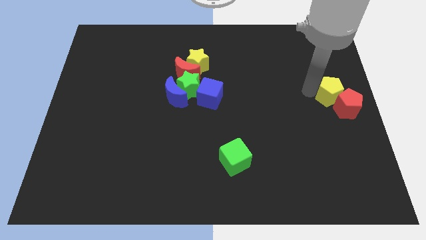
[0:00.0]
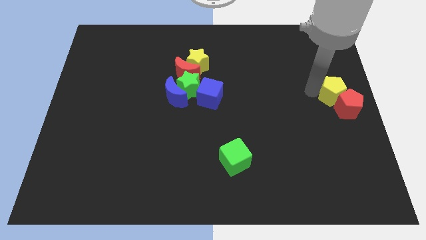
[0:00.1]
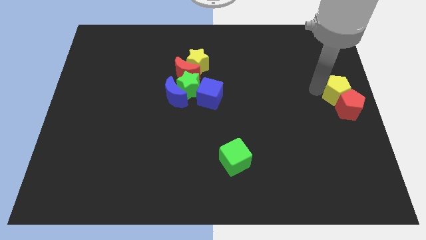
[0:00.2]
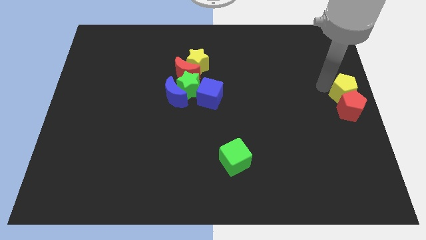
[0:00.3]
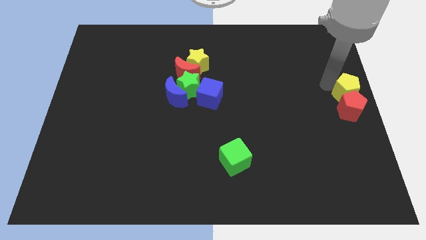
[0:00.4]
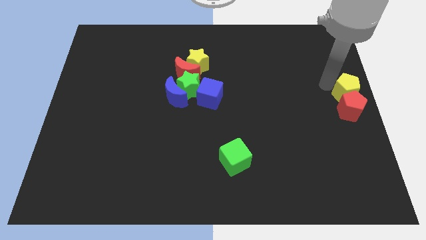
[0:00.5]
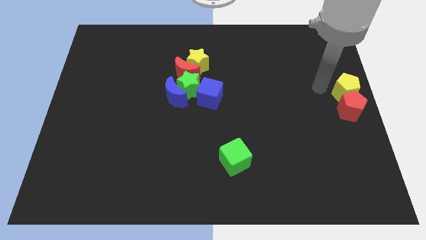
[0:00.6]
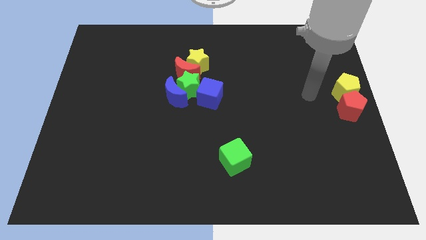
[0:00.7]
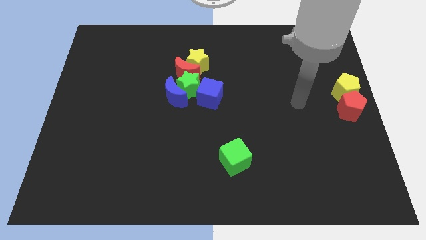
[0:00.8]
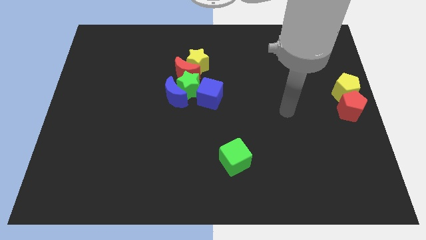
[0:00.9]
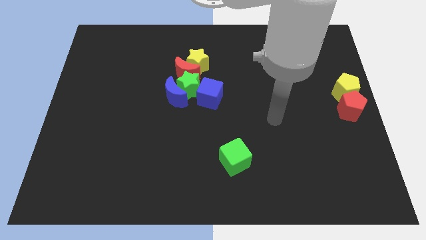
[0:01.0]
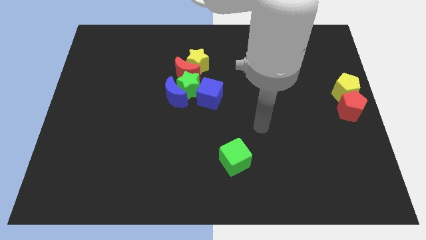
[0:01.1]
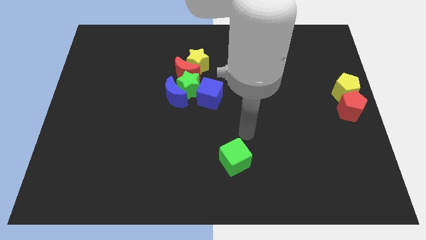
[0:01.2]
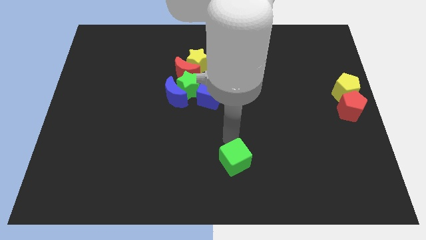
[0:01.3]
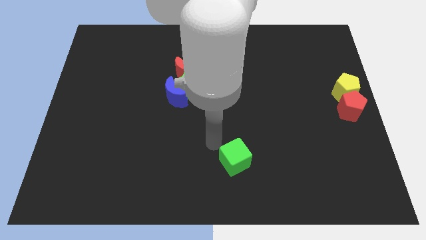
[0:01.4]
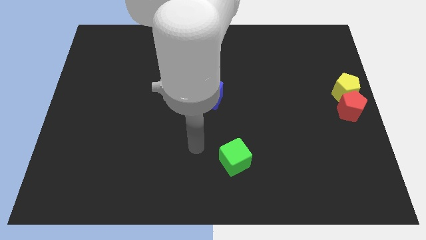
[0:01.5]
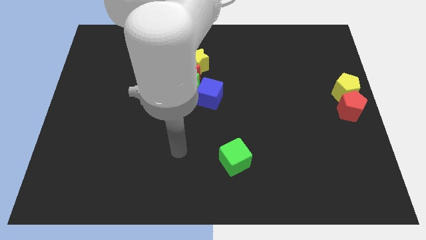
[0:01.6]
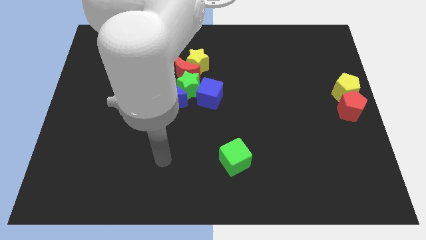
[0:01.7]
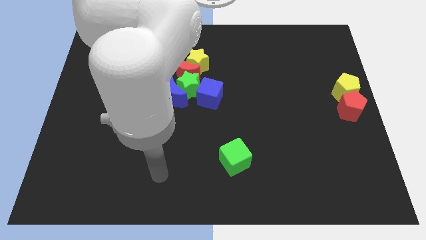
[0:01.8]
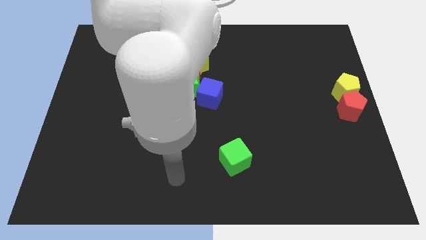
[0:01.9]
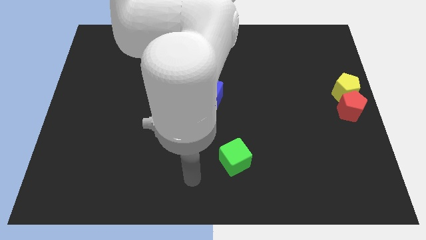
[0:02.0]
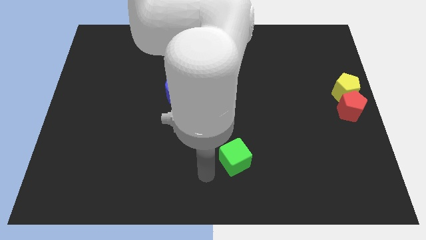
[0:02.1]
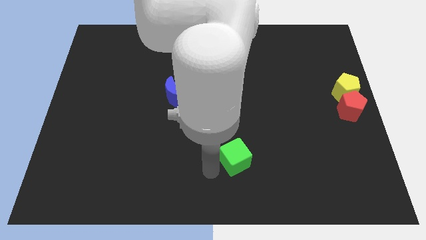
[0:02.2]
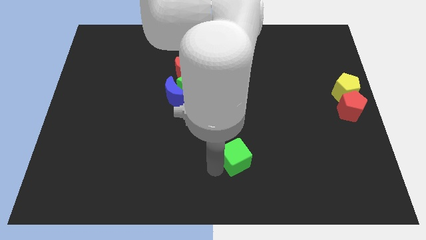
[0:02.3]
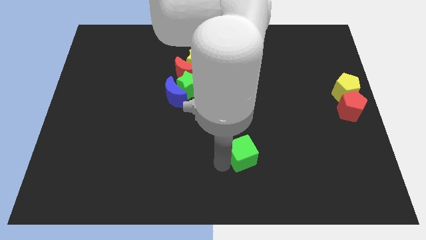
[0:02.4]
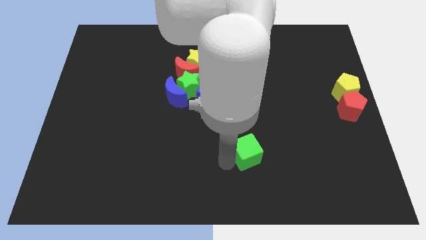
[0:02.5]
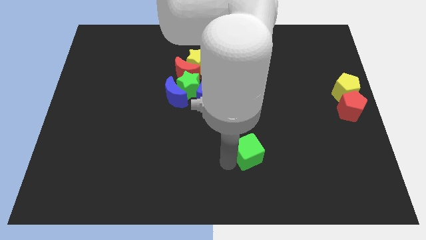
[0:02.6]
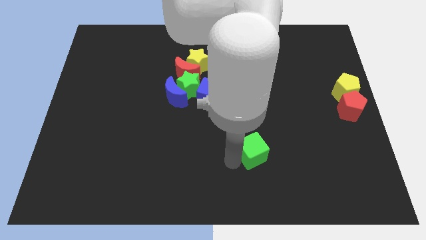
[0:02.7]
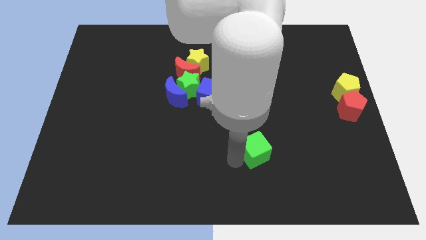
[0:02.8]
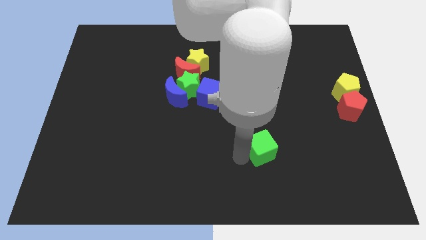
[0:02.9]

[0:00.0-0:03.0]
move the green cube towards yellow pentagon

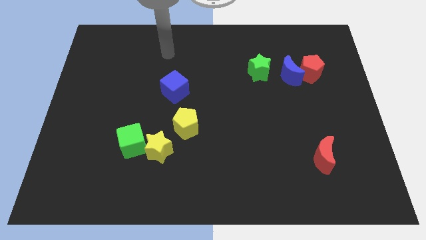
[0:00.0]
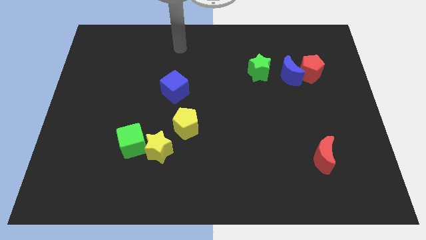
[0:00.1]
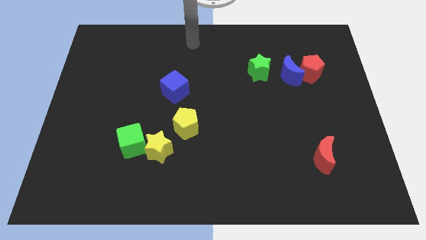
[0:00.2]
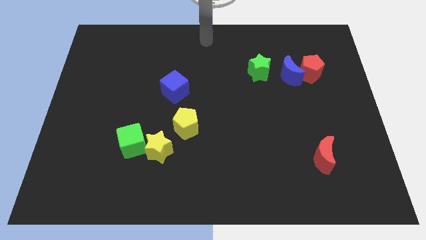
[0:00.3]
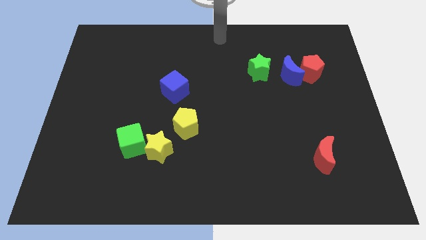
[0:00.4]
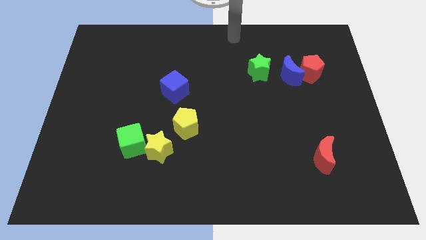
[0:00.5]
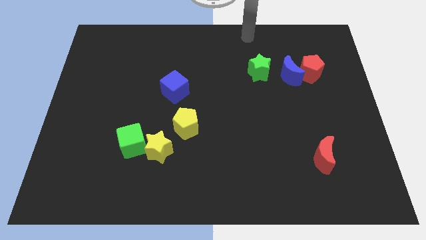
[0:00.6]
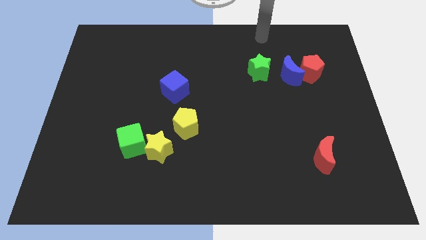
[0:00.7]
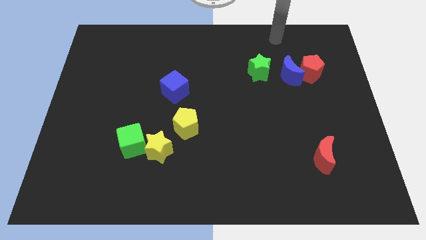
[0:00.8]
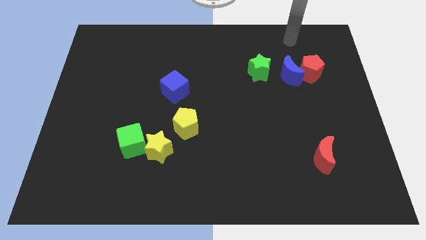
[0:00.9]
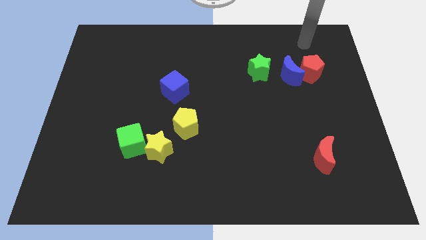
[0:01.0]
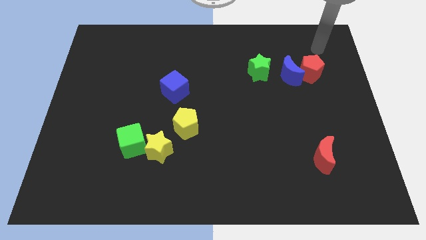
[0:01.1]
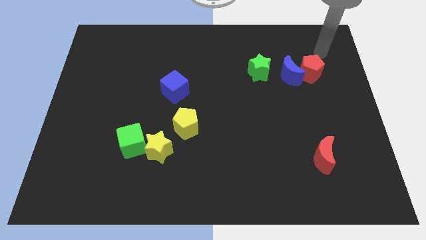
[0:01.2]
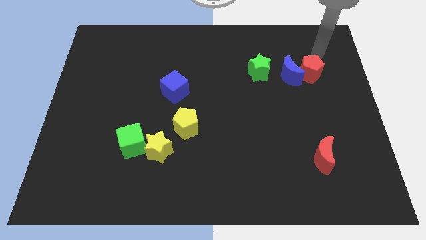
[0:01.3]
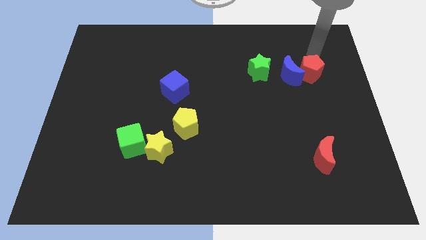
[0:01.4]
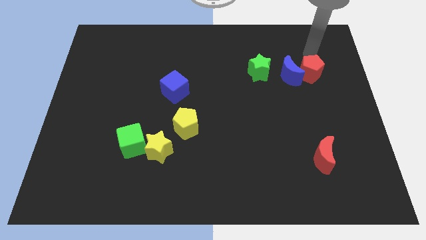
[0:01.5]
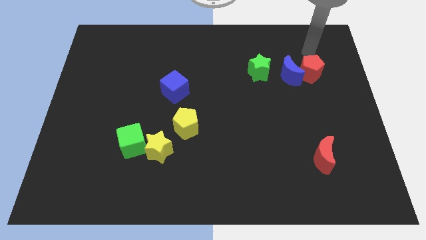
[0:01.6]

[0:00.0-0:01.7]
move your arm to the top of the red pentagon

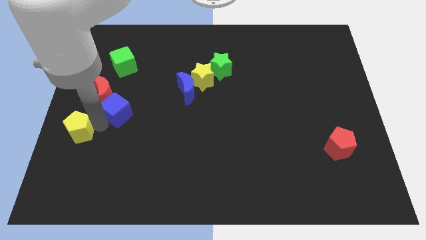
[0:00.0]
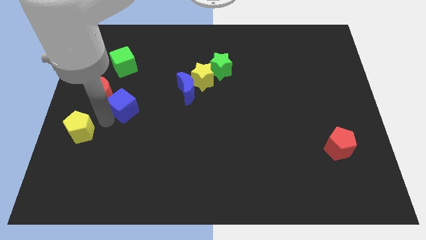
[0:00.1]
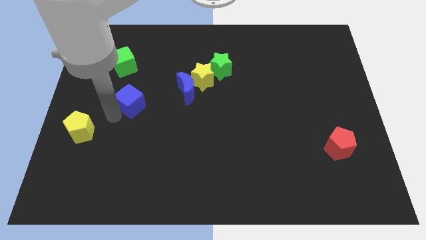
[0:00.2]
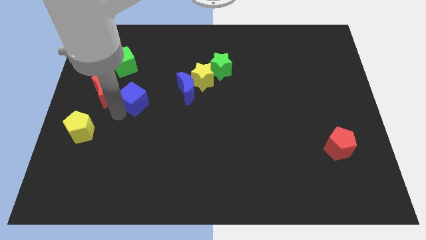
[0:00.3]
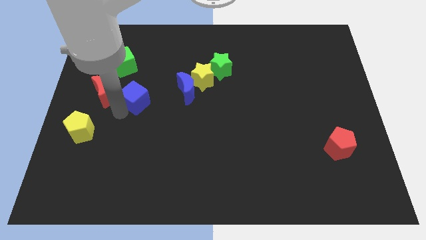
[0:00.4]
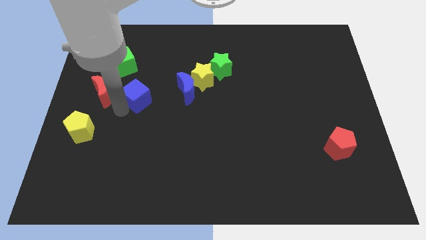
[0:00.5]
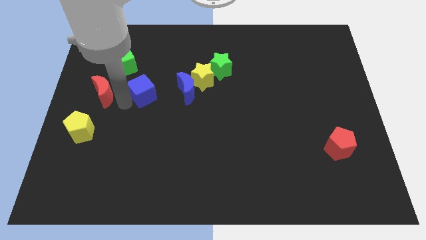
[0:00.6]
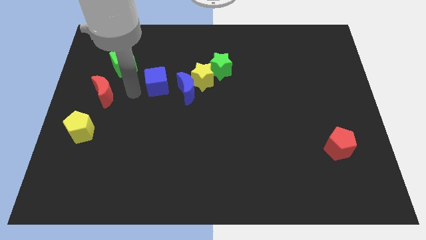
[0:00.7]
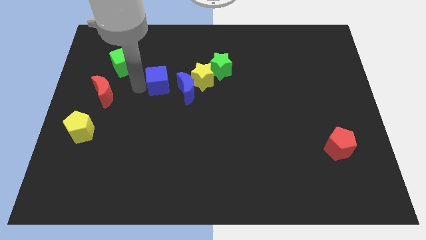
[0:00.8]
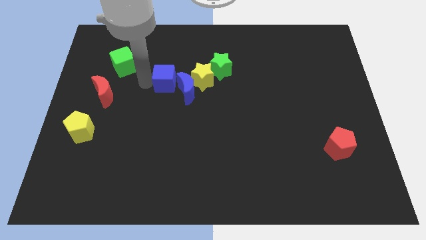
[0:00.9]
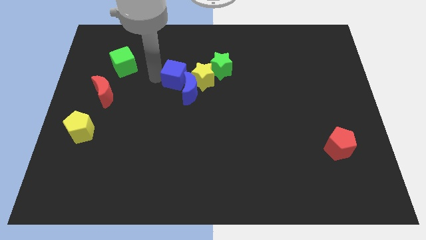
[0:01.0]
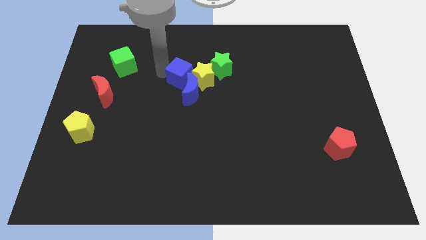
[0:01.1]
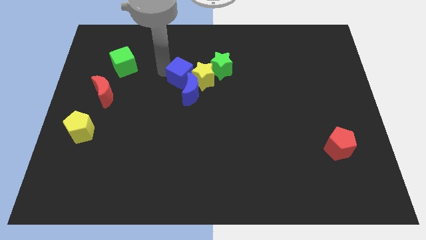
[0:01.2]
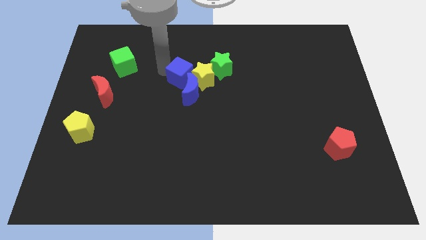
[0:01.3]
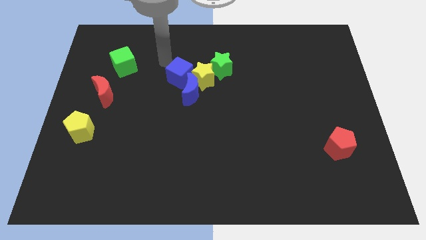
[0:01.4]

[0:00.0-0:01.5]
push the blue cube to the top of the blue crescent

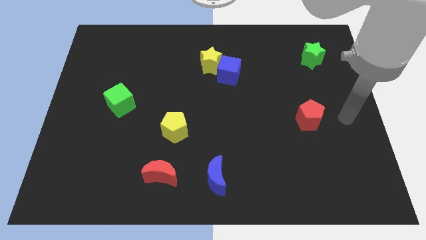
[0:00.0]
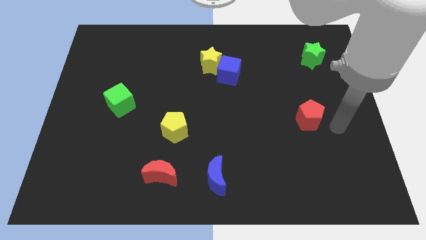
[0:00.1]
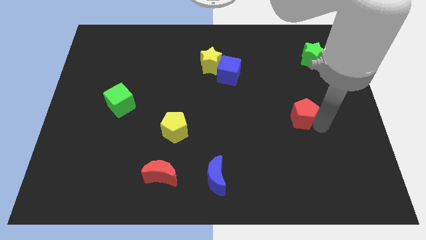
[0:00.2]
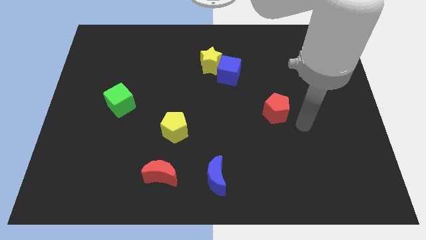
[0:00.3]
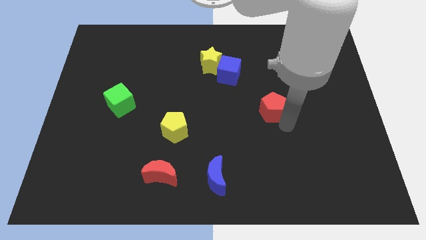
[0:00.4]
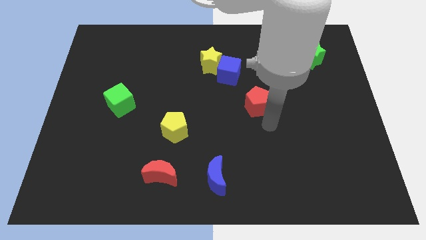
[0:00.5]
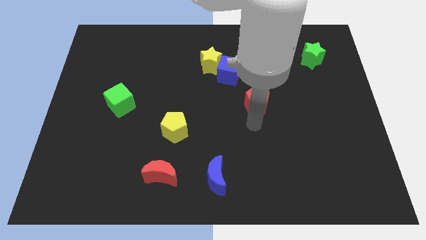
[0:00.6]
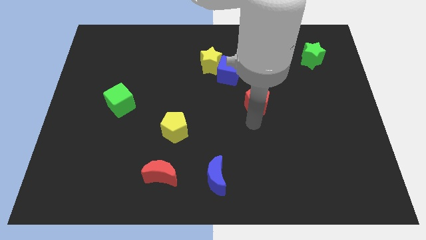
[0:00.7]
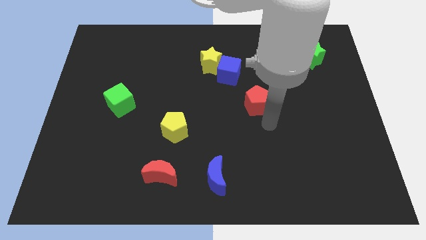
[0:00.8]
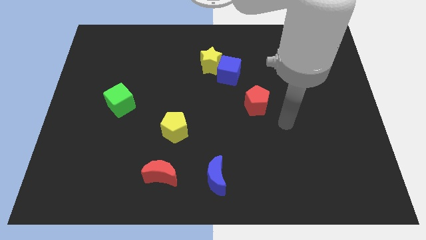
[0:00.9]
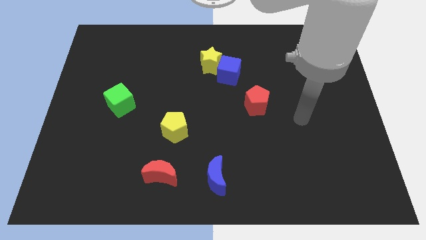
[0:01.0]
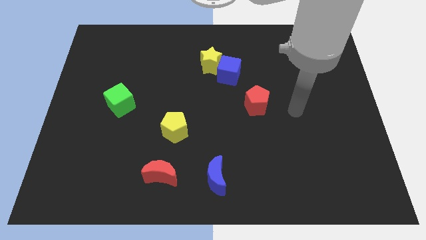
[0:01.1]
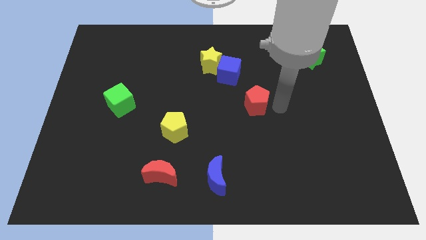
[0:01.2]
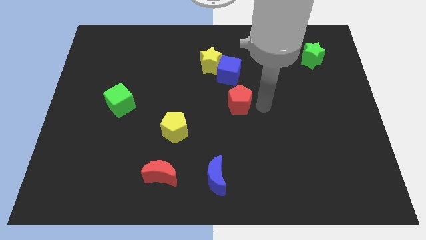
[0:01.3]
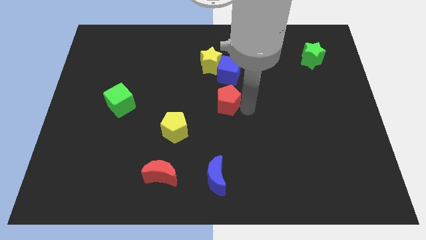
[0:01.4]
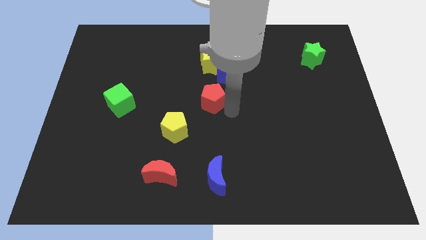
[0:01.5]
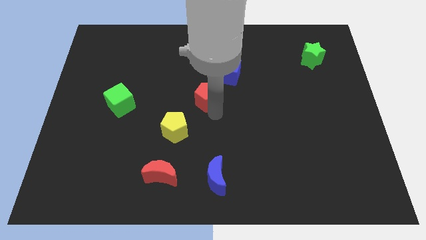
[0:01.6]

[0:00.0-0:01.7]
push the red pentagon to the slight left

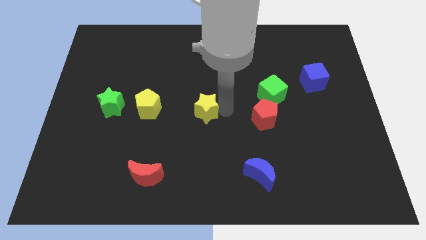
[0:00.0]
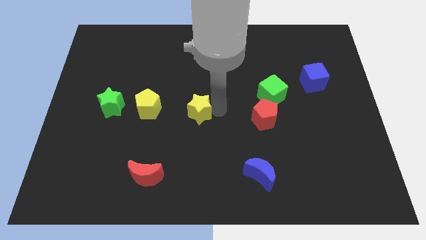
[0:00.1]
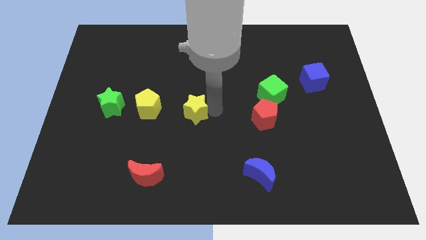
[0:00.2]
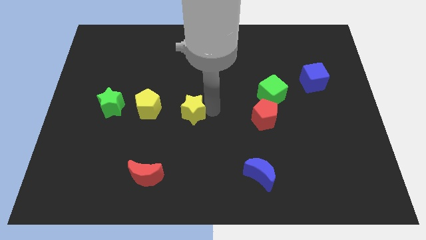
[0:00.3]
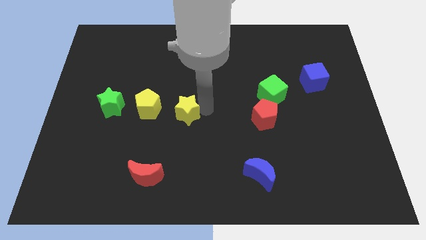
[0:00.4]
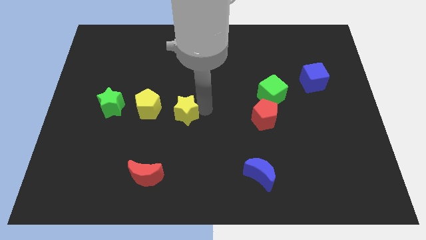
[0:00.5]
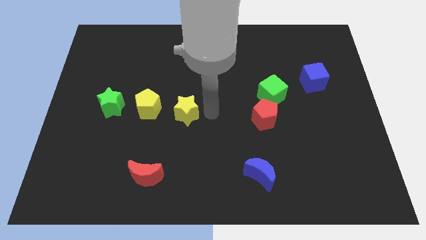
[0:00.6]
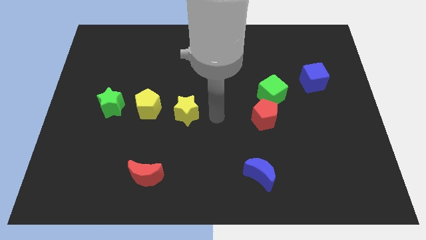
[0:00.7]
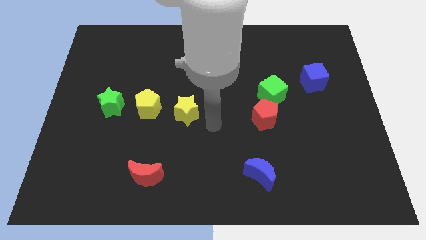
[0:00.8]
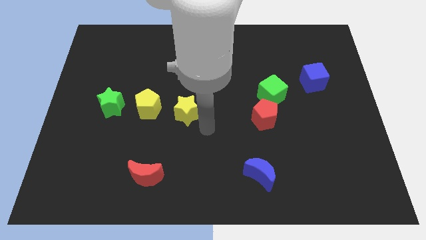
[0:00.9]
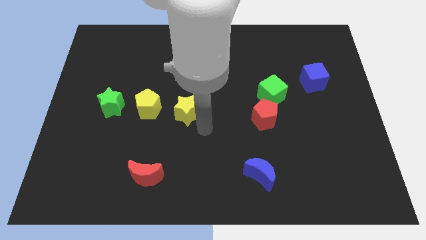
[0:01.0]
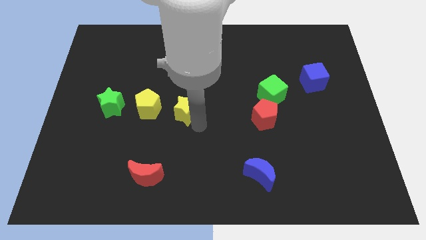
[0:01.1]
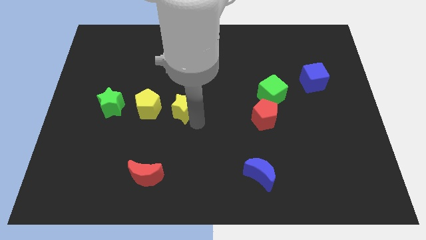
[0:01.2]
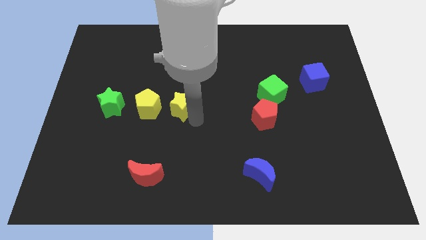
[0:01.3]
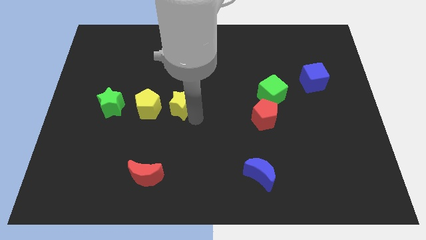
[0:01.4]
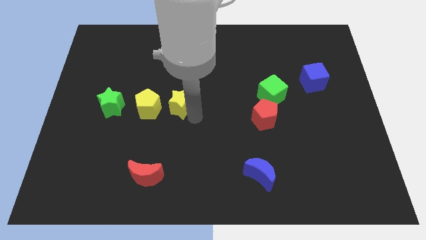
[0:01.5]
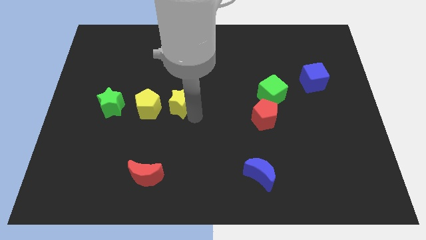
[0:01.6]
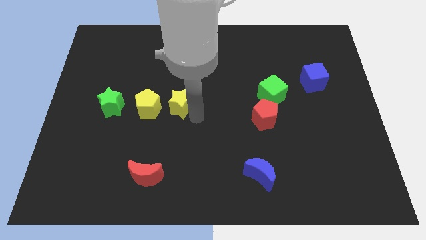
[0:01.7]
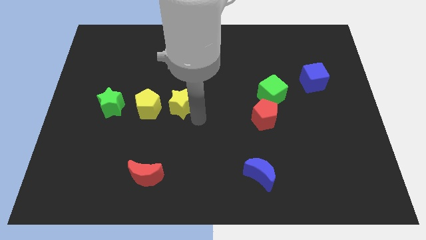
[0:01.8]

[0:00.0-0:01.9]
place yellow star beside yellow pentagon
